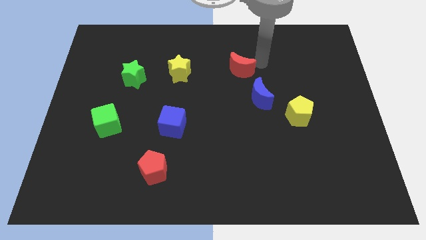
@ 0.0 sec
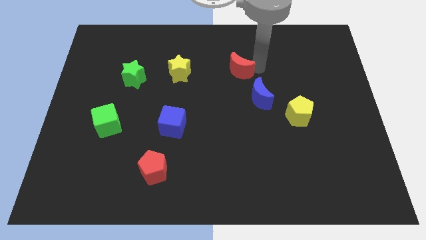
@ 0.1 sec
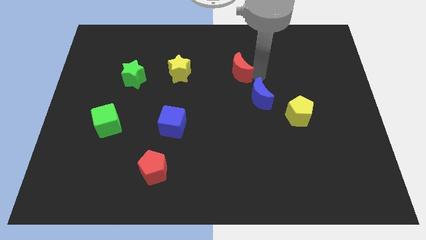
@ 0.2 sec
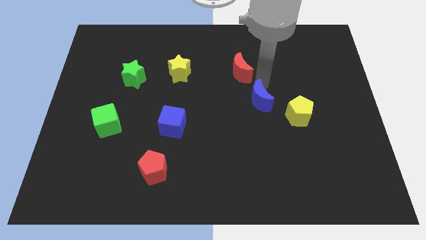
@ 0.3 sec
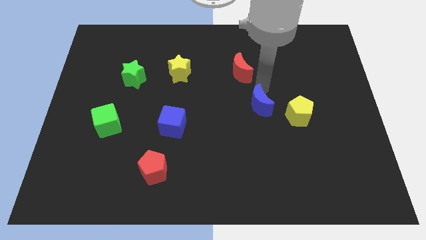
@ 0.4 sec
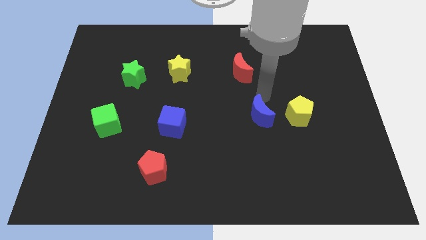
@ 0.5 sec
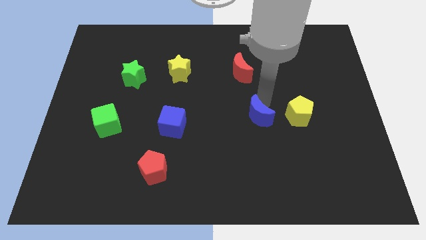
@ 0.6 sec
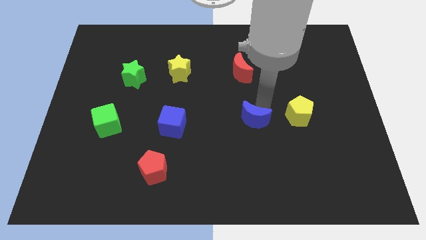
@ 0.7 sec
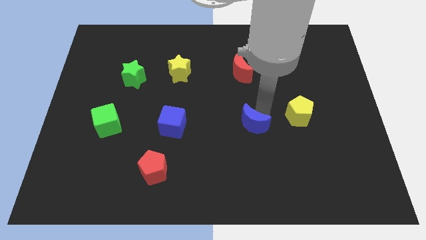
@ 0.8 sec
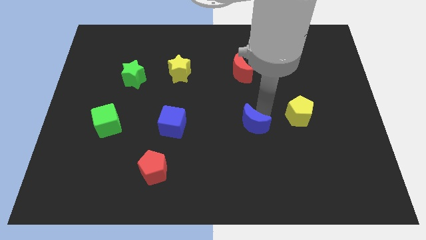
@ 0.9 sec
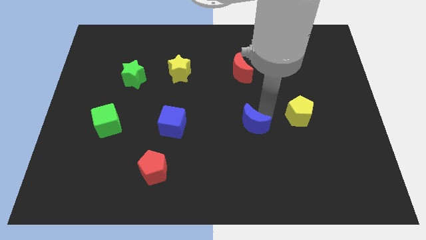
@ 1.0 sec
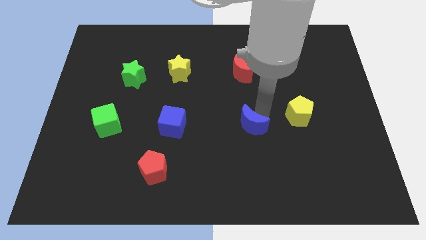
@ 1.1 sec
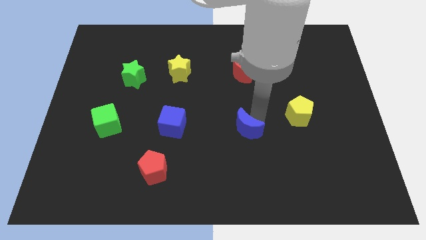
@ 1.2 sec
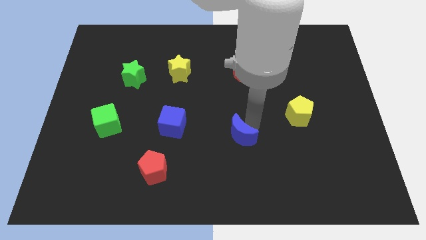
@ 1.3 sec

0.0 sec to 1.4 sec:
place the blue moon in between the blue cube and yellow pentagon

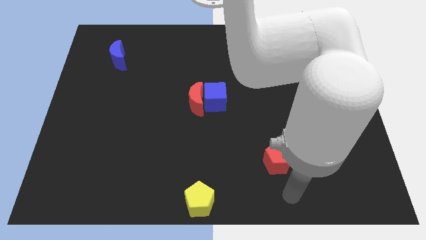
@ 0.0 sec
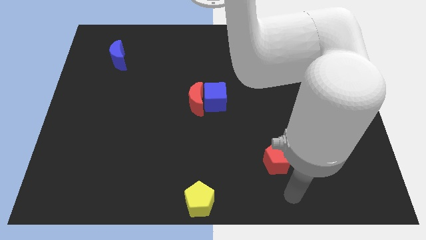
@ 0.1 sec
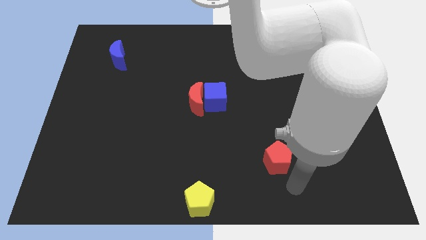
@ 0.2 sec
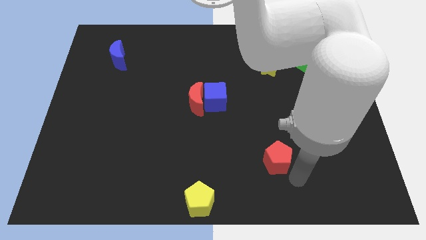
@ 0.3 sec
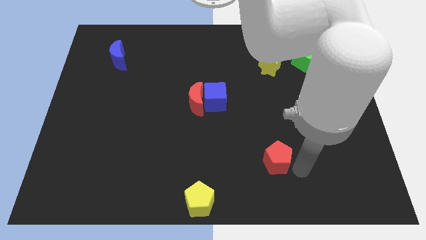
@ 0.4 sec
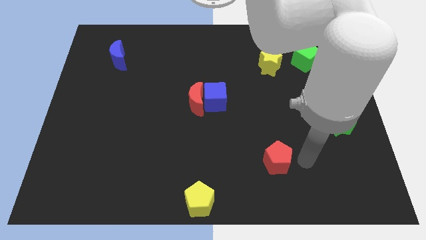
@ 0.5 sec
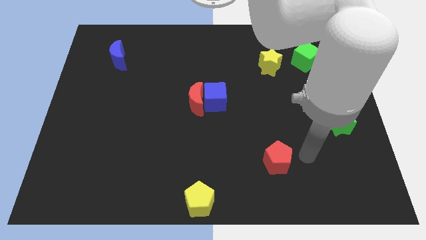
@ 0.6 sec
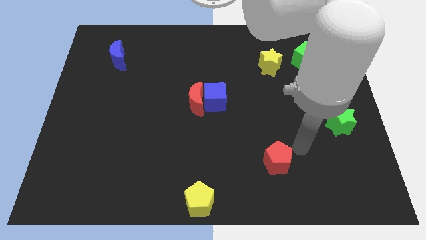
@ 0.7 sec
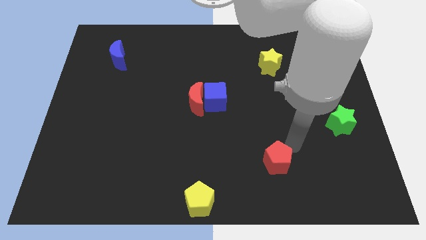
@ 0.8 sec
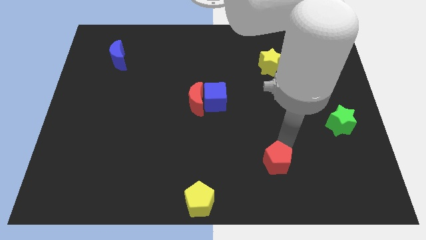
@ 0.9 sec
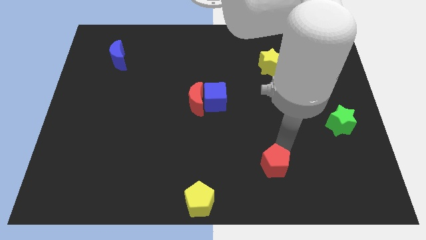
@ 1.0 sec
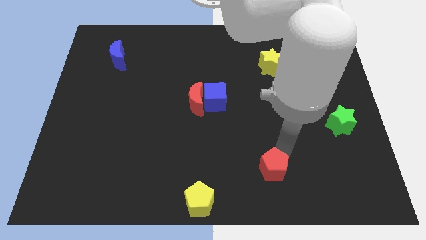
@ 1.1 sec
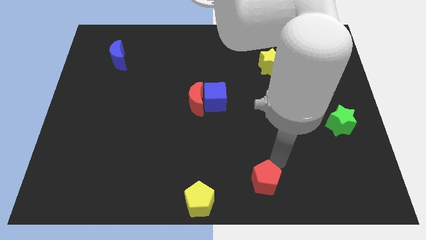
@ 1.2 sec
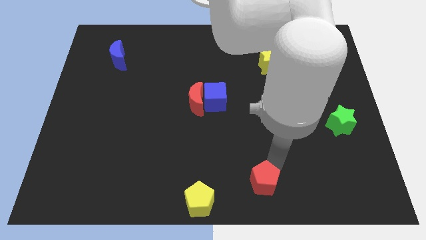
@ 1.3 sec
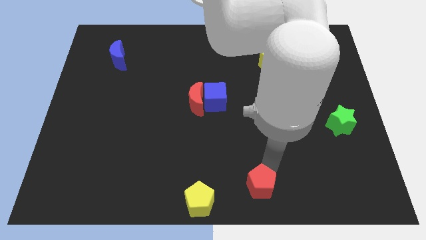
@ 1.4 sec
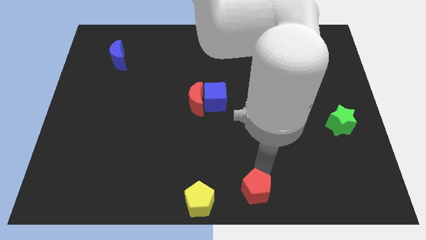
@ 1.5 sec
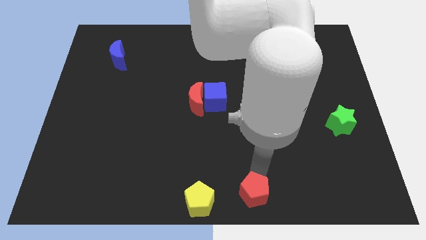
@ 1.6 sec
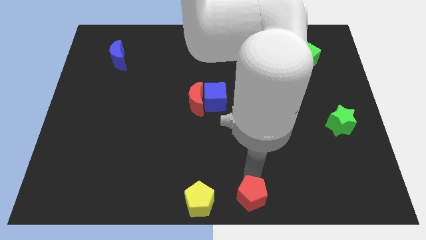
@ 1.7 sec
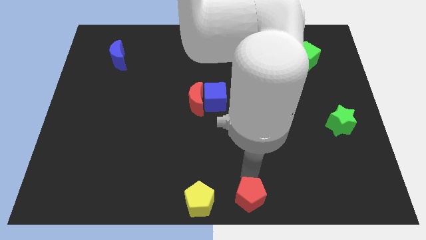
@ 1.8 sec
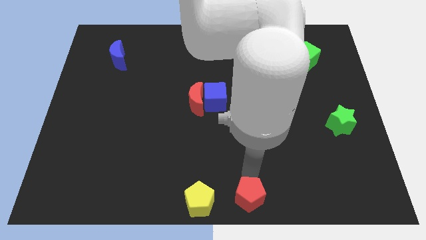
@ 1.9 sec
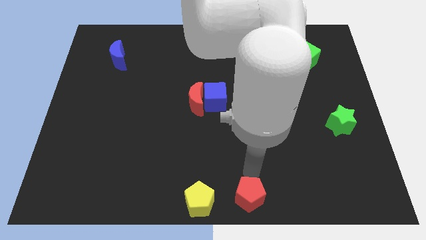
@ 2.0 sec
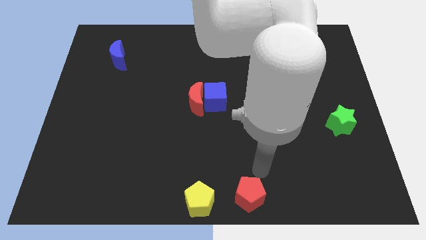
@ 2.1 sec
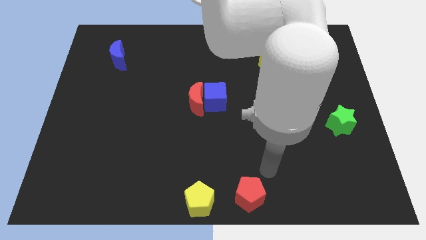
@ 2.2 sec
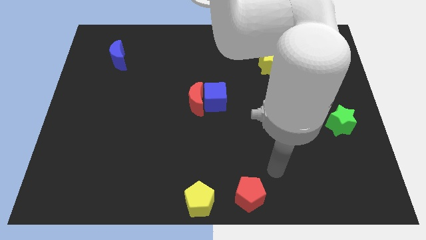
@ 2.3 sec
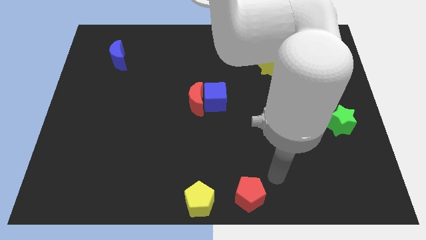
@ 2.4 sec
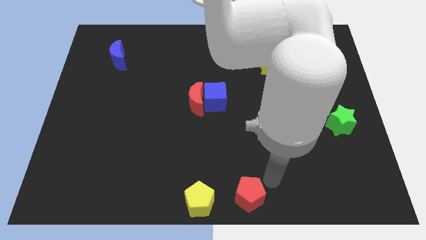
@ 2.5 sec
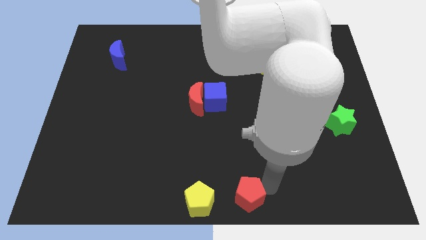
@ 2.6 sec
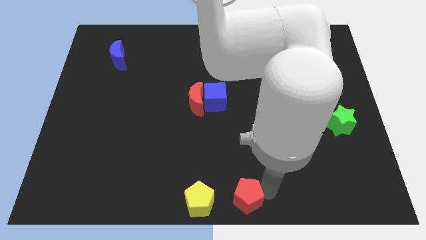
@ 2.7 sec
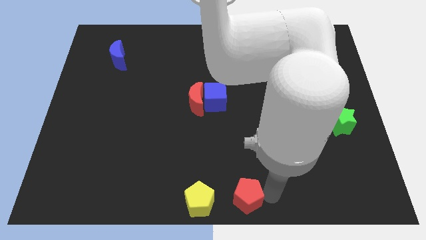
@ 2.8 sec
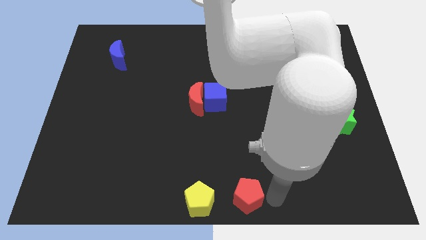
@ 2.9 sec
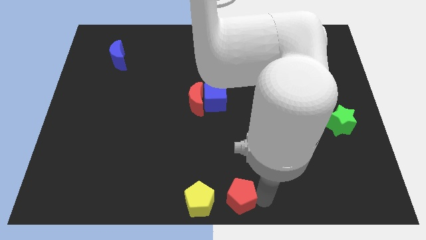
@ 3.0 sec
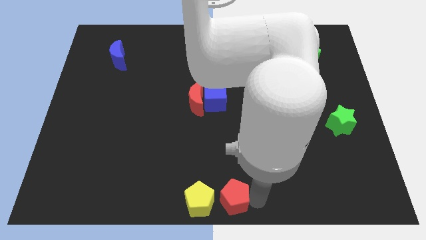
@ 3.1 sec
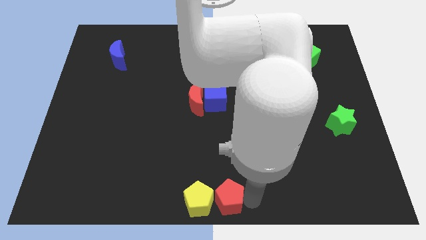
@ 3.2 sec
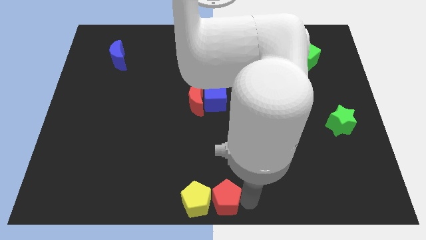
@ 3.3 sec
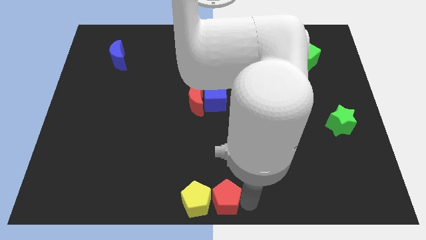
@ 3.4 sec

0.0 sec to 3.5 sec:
move the red pentagon to the right of the yellow pentagon

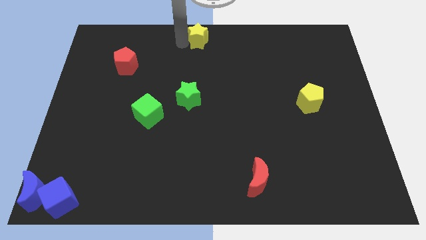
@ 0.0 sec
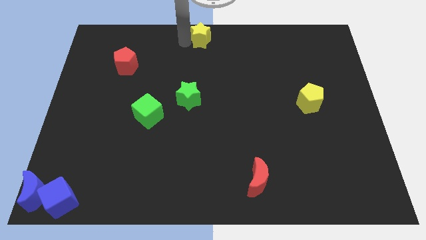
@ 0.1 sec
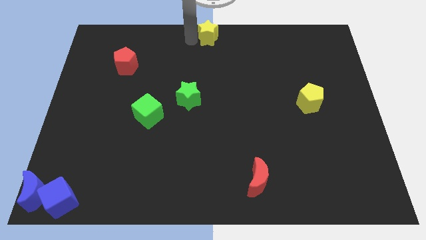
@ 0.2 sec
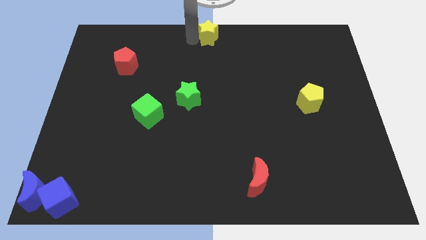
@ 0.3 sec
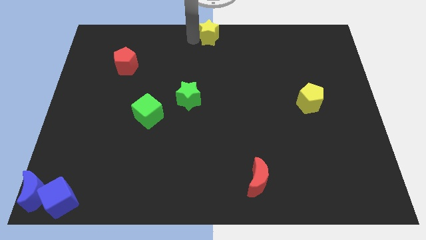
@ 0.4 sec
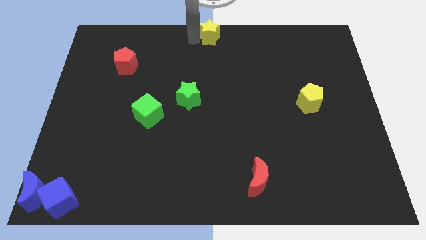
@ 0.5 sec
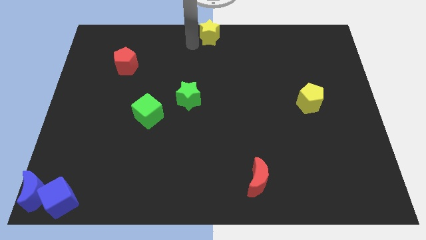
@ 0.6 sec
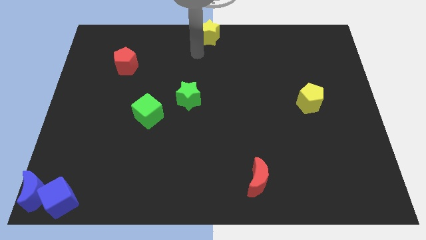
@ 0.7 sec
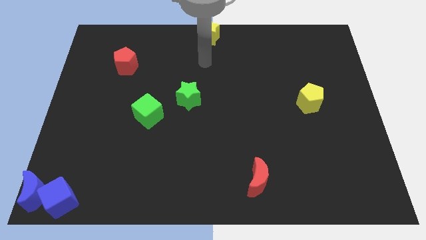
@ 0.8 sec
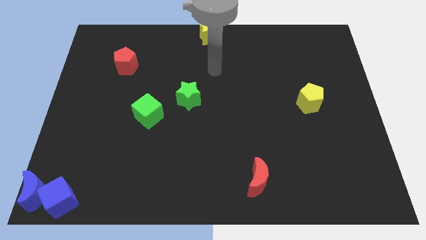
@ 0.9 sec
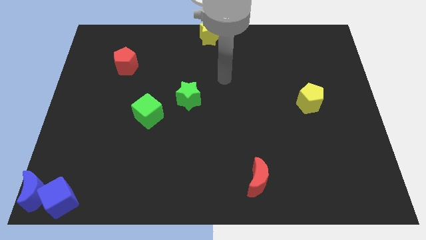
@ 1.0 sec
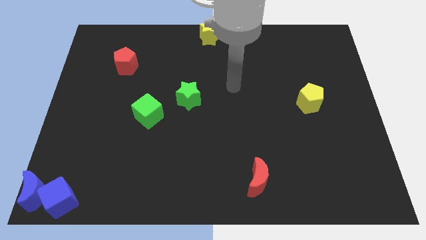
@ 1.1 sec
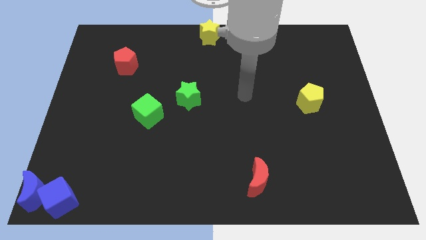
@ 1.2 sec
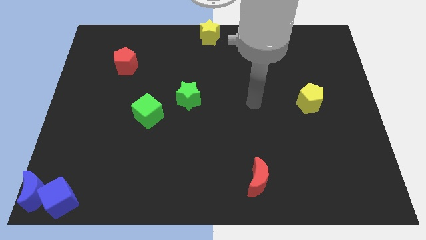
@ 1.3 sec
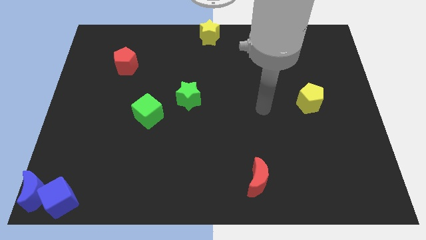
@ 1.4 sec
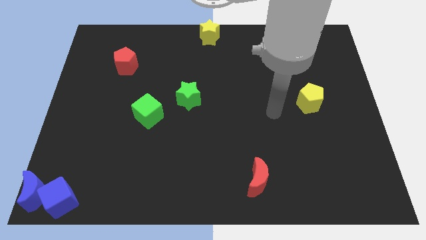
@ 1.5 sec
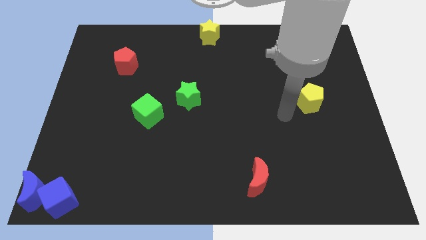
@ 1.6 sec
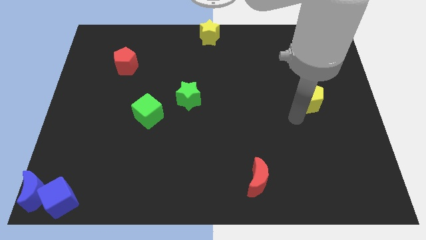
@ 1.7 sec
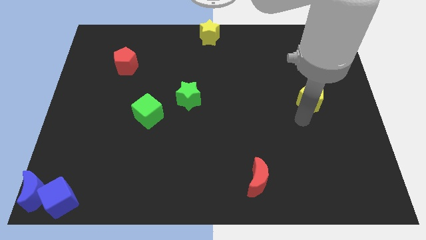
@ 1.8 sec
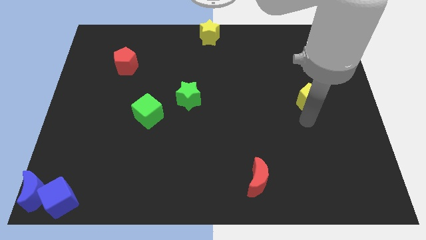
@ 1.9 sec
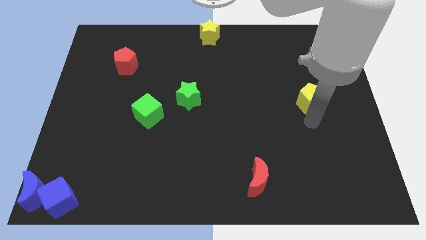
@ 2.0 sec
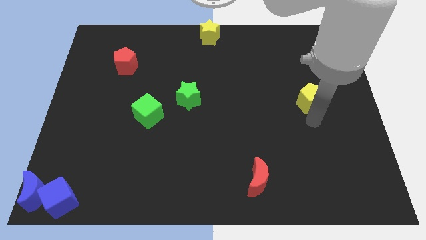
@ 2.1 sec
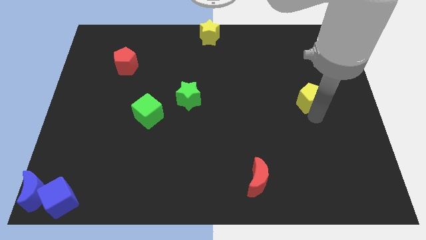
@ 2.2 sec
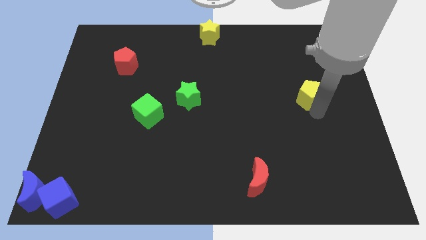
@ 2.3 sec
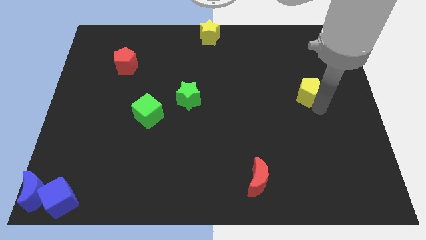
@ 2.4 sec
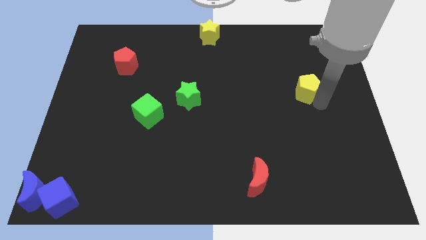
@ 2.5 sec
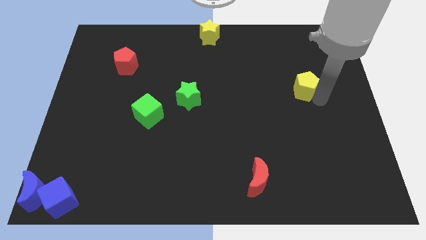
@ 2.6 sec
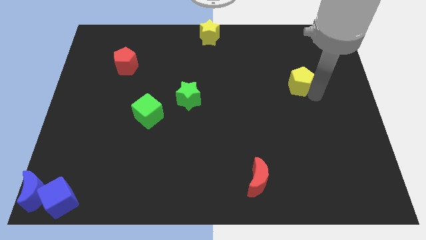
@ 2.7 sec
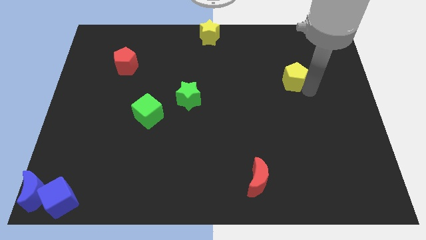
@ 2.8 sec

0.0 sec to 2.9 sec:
move the arm around the yellow pentagon

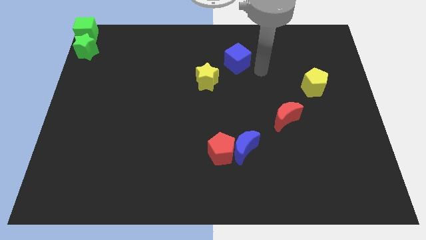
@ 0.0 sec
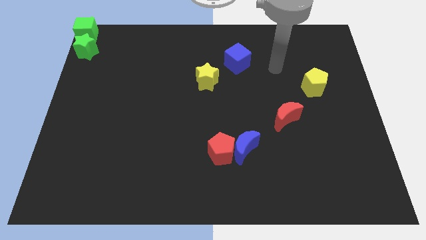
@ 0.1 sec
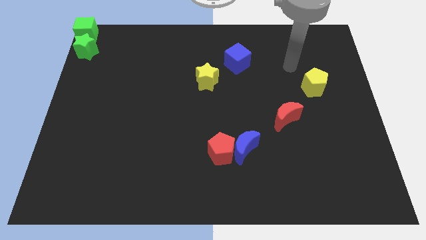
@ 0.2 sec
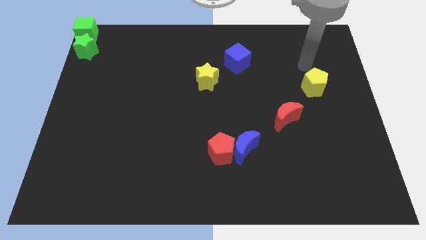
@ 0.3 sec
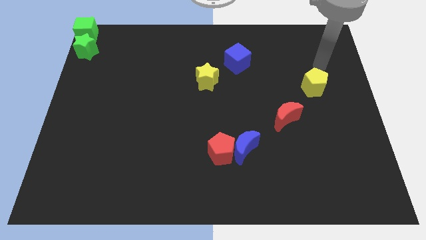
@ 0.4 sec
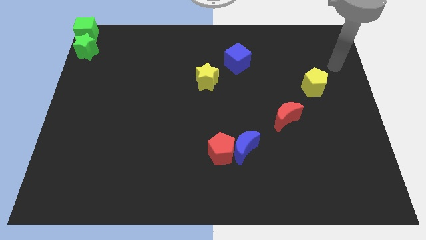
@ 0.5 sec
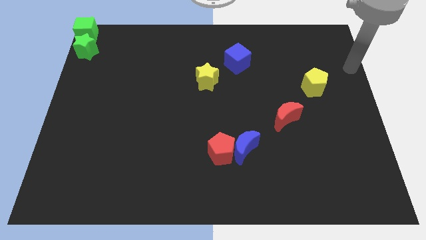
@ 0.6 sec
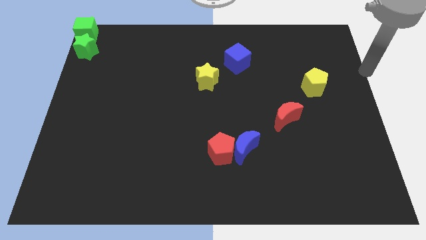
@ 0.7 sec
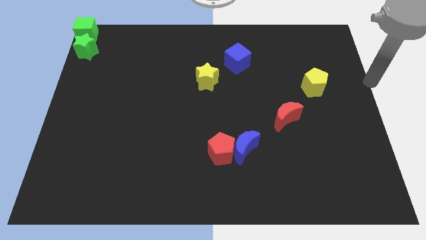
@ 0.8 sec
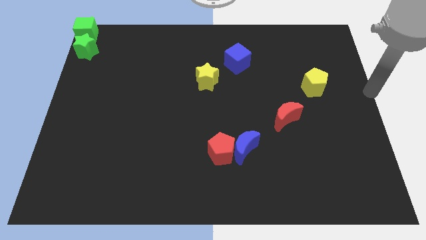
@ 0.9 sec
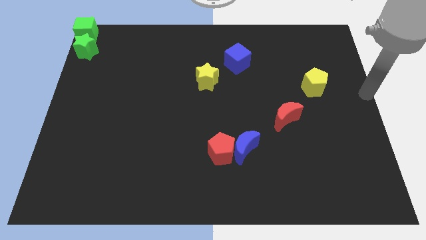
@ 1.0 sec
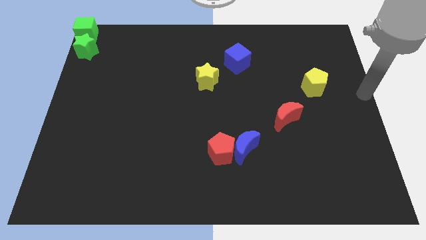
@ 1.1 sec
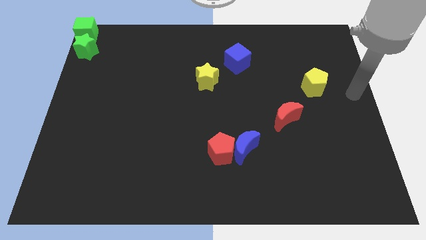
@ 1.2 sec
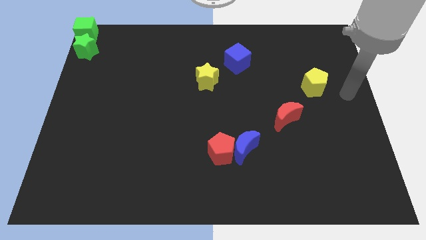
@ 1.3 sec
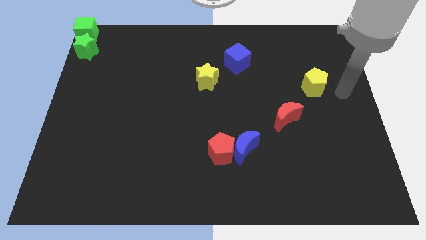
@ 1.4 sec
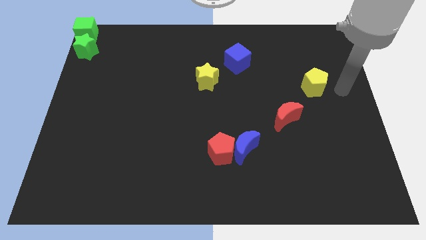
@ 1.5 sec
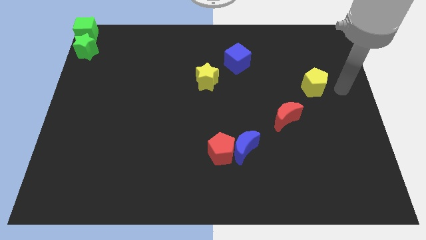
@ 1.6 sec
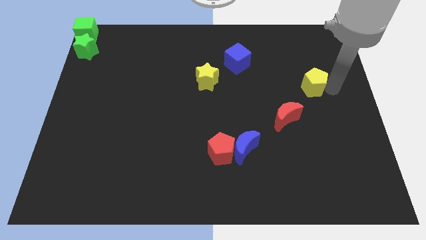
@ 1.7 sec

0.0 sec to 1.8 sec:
move your arm to the right side of the yellow pentagon
